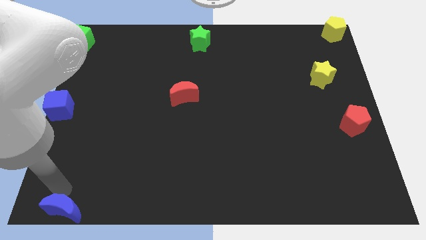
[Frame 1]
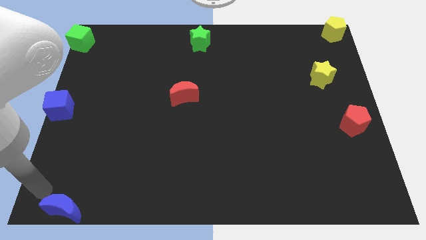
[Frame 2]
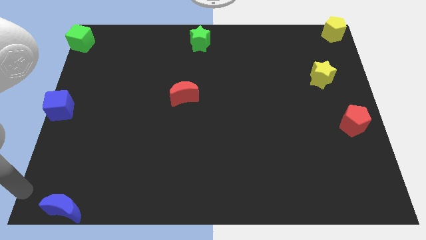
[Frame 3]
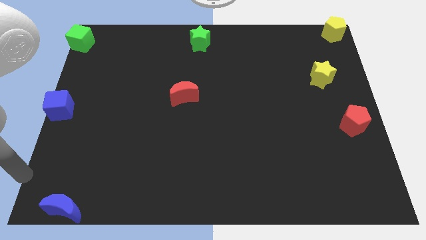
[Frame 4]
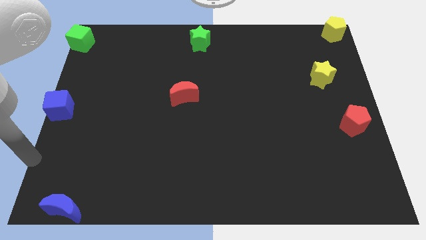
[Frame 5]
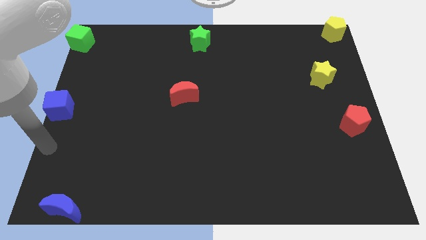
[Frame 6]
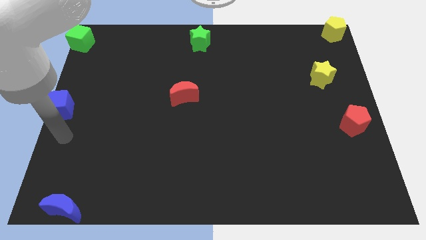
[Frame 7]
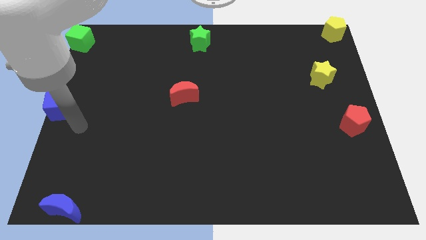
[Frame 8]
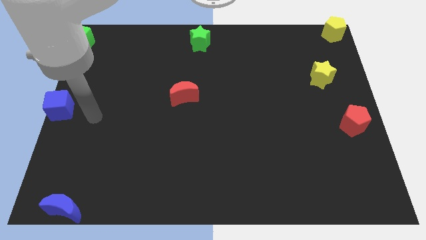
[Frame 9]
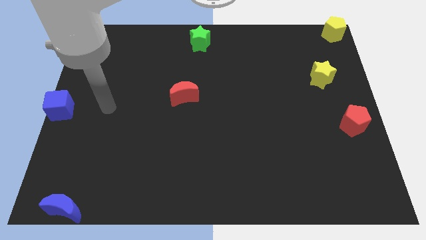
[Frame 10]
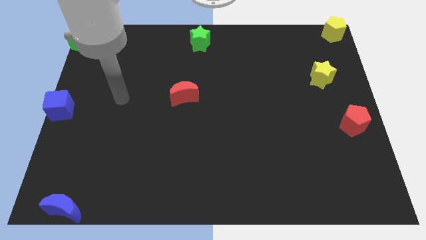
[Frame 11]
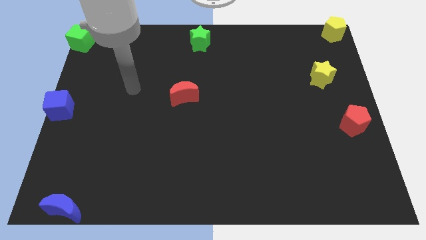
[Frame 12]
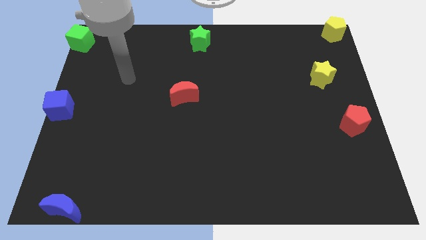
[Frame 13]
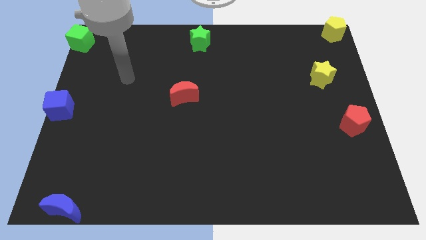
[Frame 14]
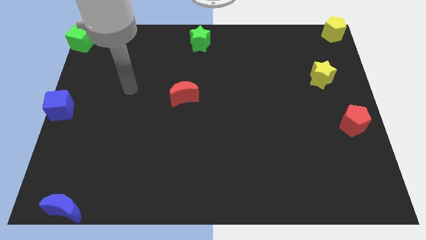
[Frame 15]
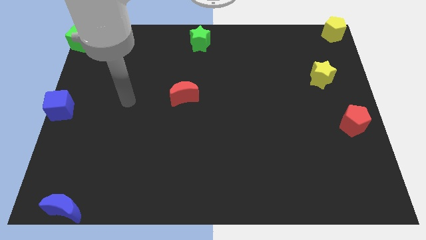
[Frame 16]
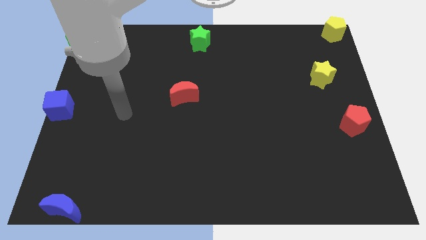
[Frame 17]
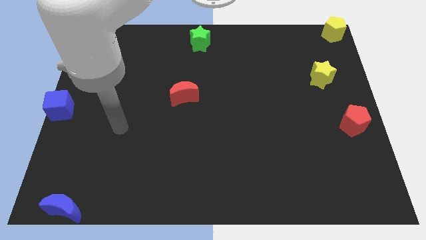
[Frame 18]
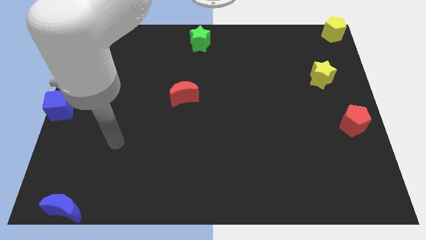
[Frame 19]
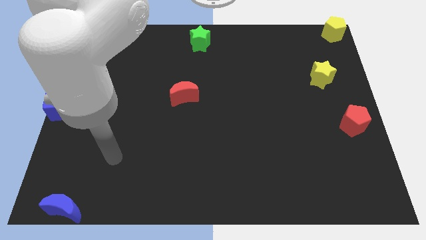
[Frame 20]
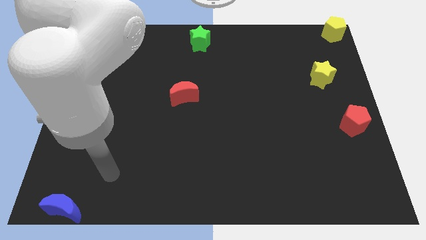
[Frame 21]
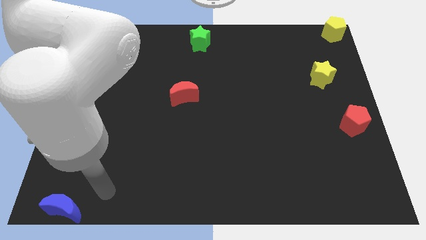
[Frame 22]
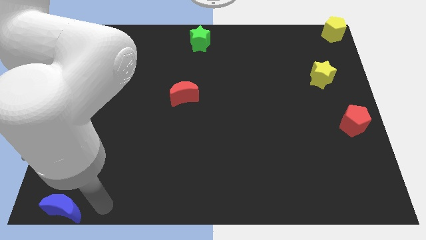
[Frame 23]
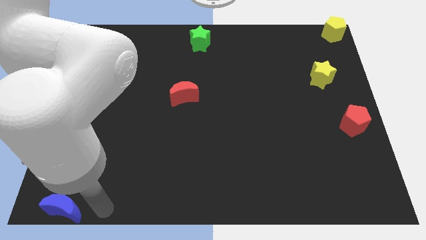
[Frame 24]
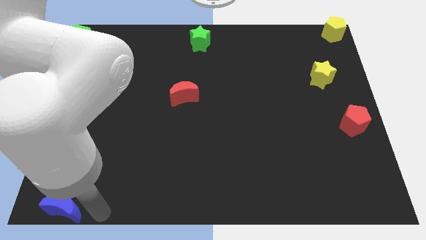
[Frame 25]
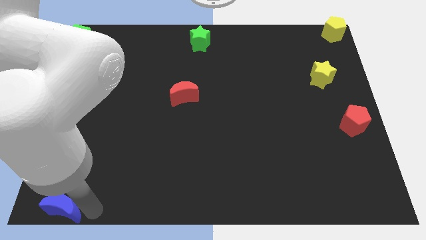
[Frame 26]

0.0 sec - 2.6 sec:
move your arm and point to the right of the blue crescent

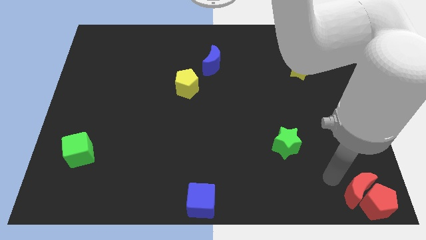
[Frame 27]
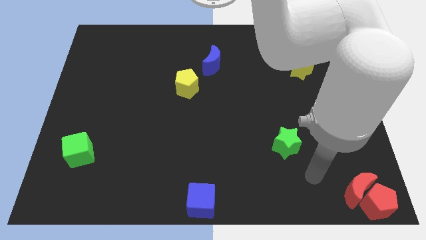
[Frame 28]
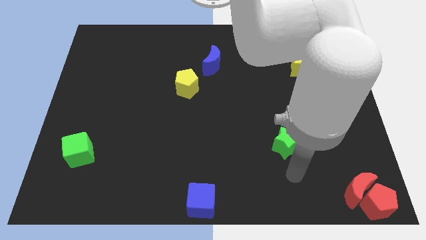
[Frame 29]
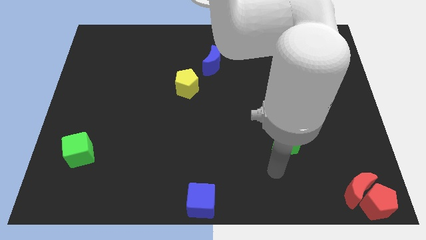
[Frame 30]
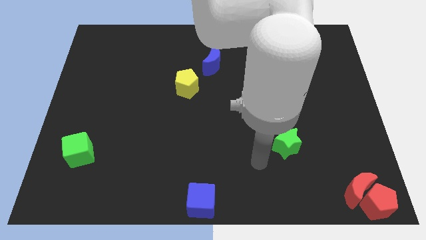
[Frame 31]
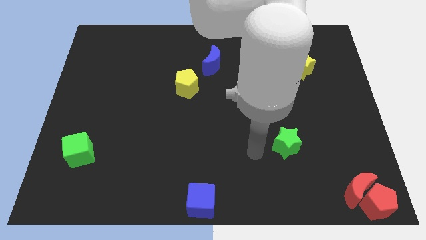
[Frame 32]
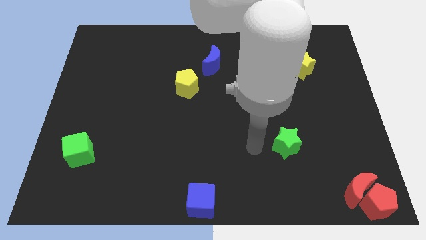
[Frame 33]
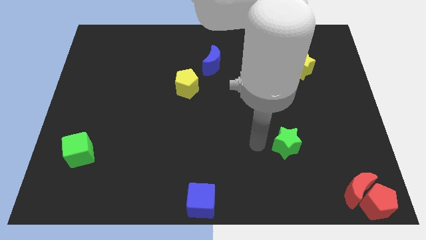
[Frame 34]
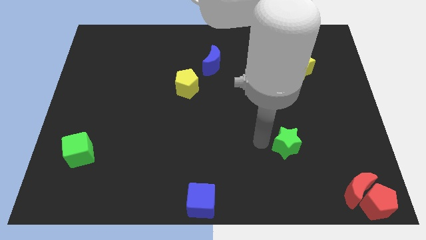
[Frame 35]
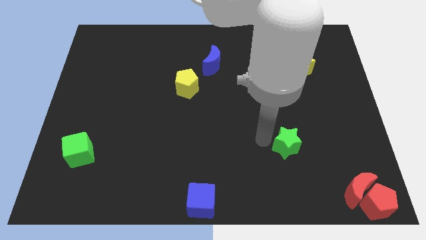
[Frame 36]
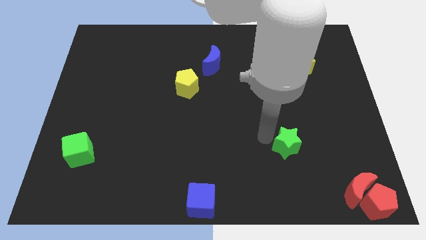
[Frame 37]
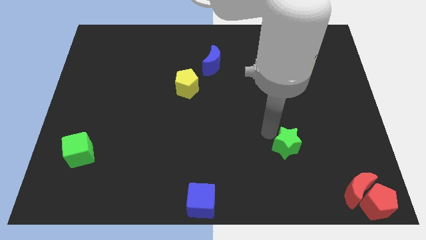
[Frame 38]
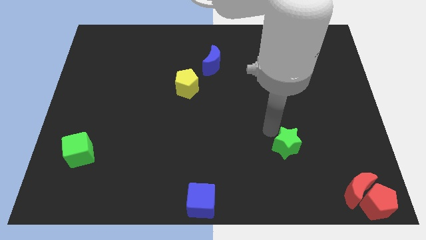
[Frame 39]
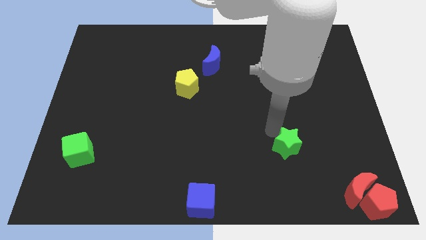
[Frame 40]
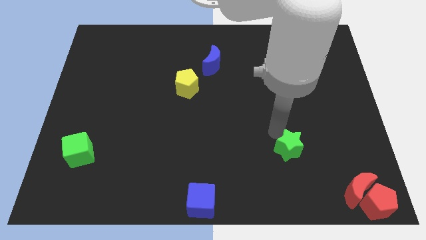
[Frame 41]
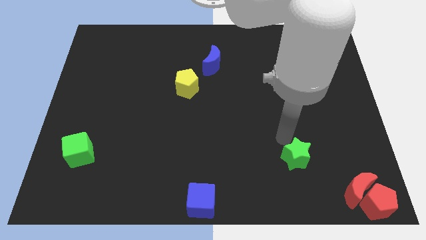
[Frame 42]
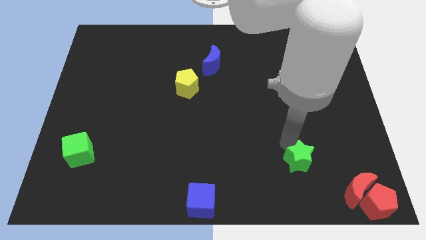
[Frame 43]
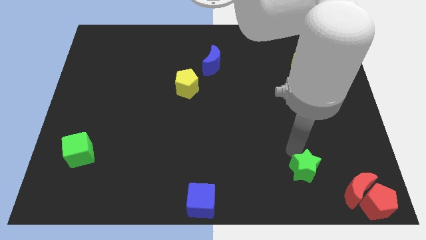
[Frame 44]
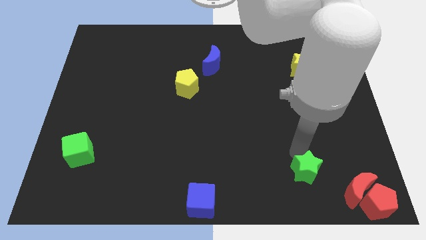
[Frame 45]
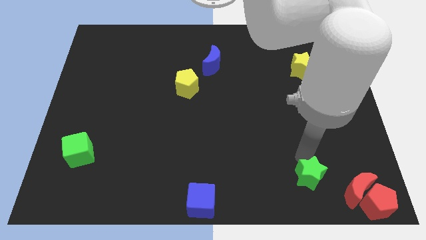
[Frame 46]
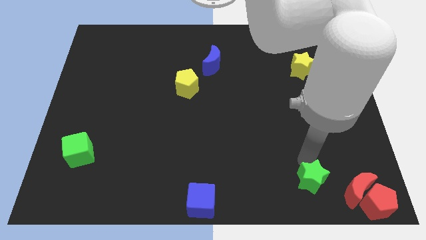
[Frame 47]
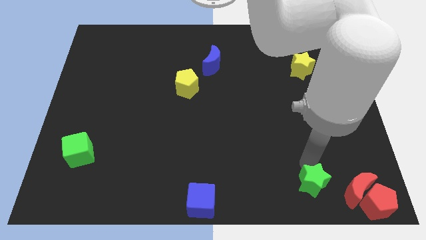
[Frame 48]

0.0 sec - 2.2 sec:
push the green star towards the red crescent

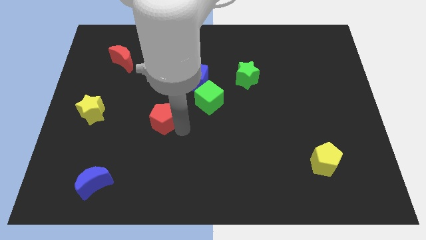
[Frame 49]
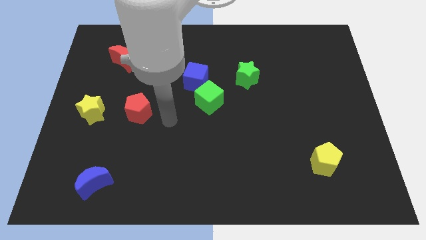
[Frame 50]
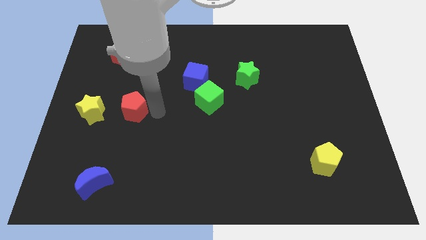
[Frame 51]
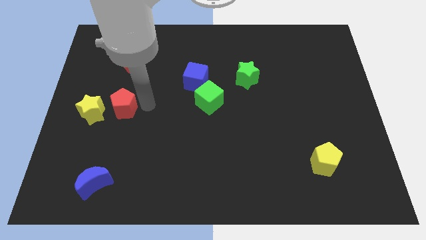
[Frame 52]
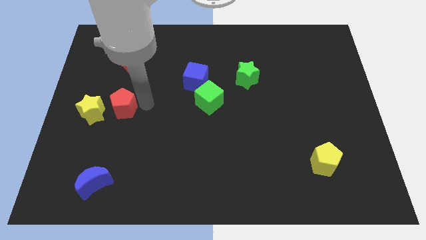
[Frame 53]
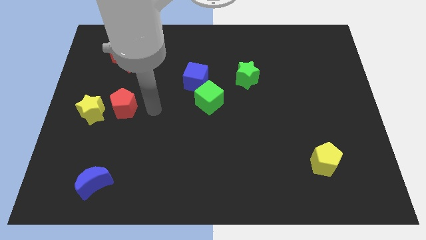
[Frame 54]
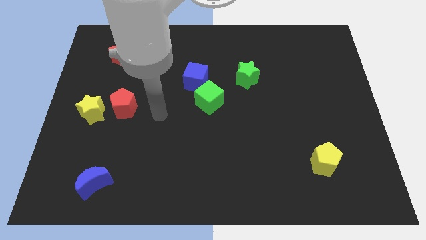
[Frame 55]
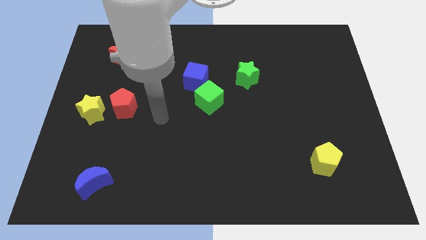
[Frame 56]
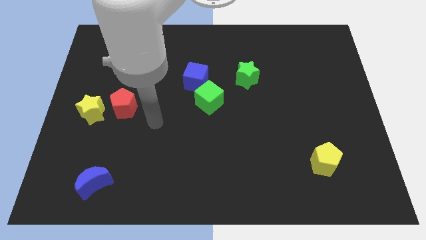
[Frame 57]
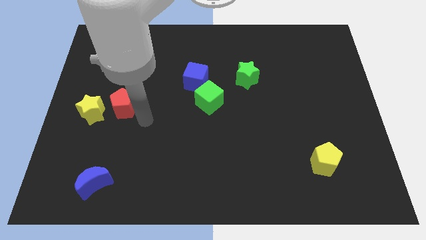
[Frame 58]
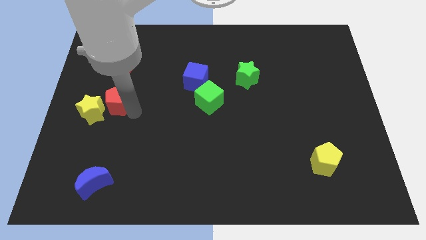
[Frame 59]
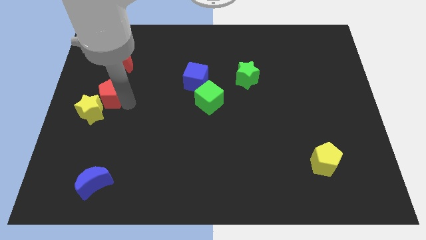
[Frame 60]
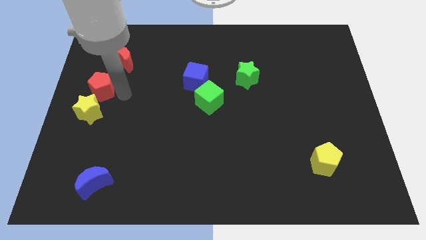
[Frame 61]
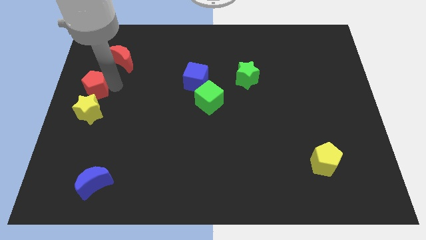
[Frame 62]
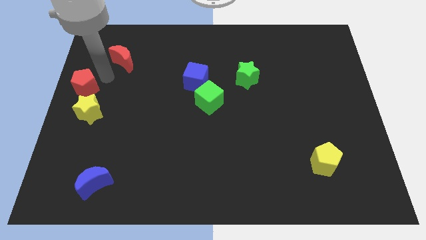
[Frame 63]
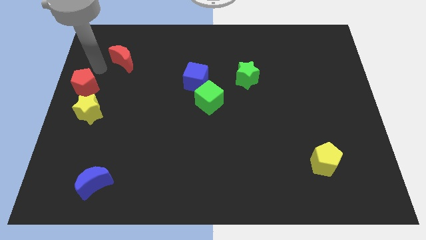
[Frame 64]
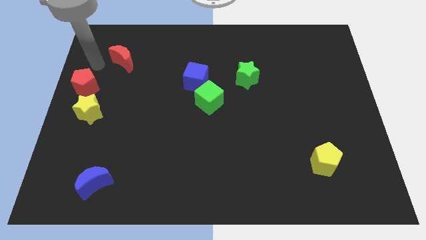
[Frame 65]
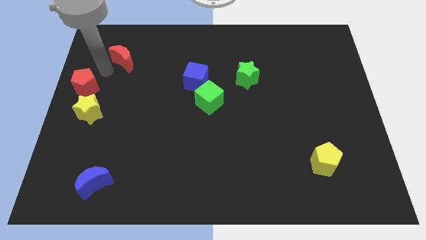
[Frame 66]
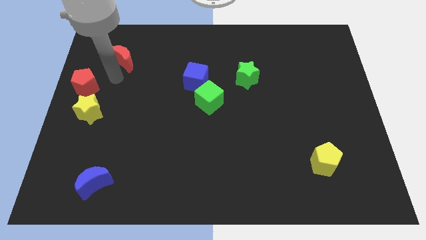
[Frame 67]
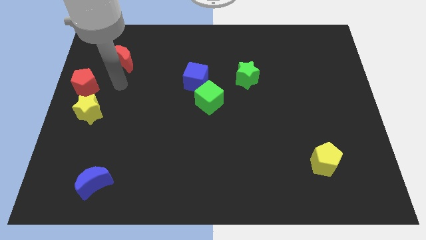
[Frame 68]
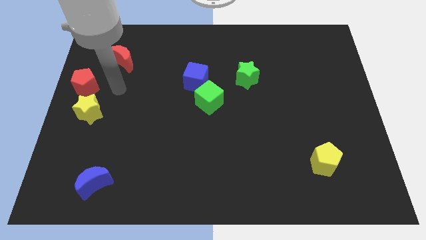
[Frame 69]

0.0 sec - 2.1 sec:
push the red pentagon at the top side of the yellow star

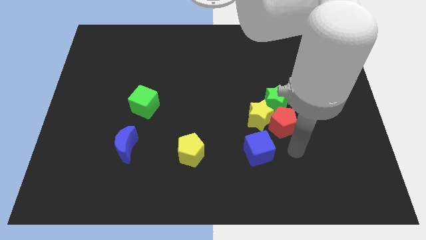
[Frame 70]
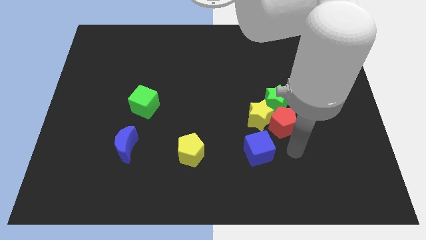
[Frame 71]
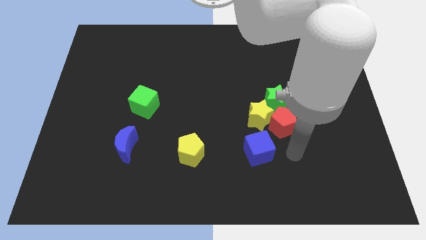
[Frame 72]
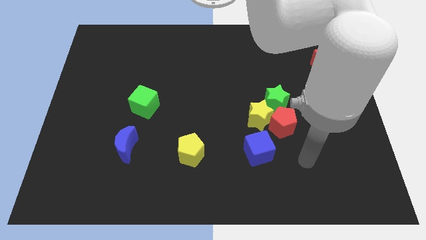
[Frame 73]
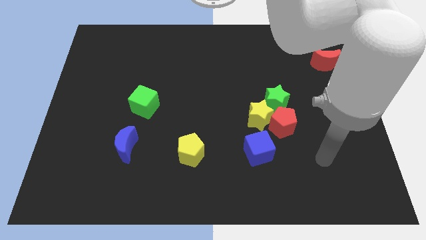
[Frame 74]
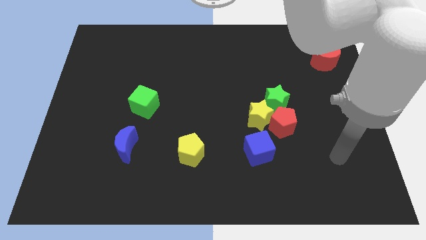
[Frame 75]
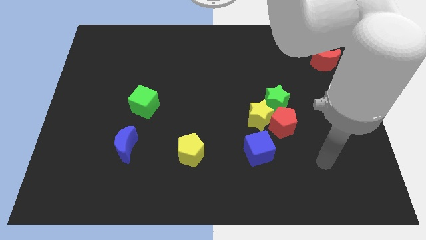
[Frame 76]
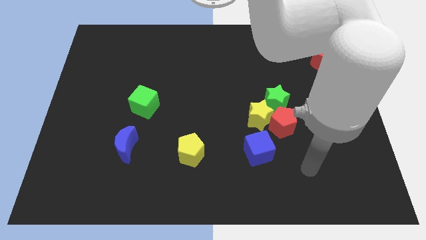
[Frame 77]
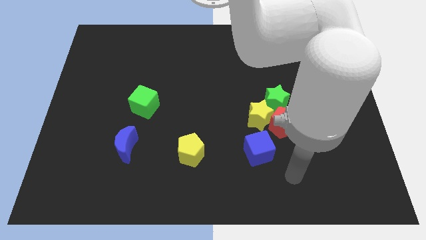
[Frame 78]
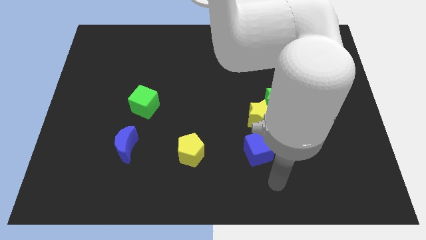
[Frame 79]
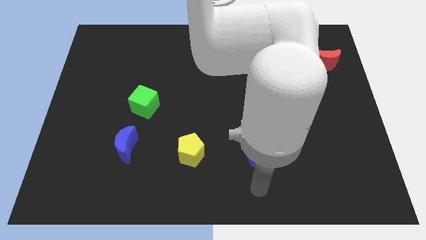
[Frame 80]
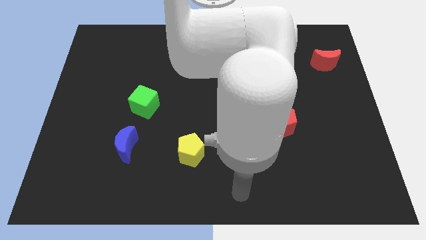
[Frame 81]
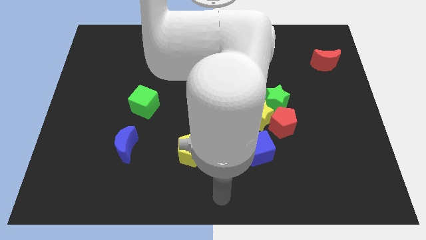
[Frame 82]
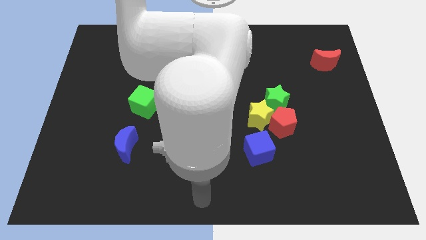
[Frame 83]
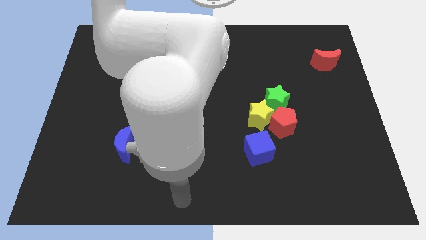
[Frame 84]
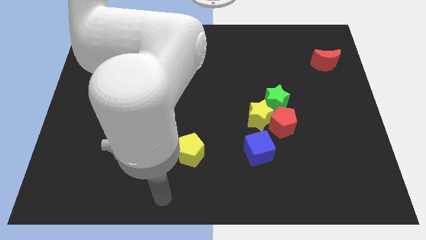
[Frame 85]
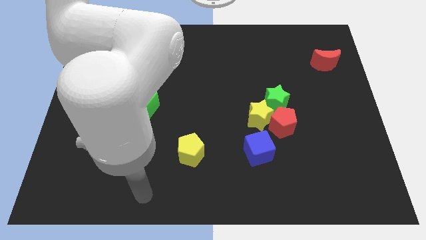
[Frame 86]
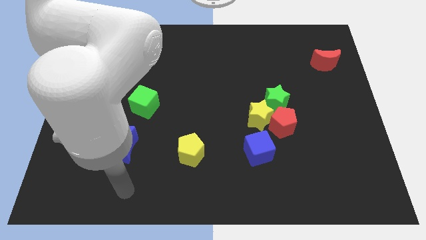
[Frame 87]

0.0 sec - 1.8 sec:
move the arm away from the blue cube

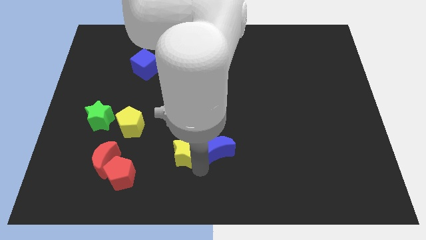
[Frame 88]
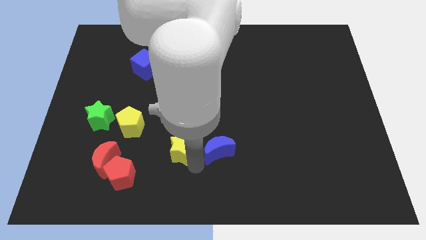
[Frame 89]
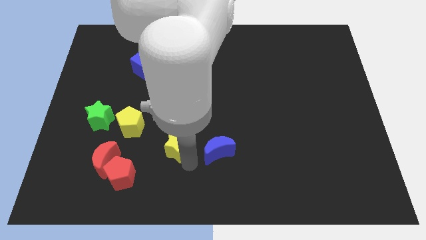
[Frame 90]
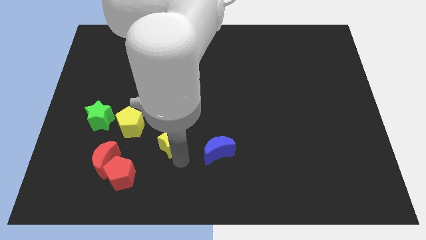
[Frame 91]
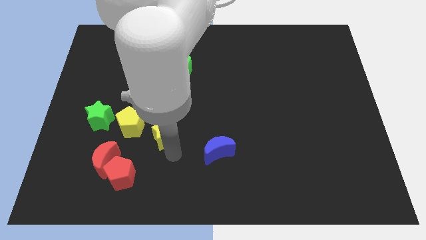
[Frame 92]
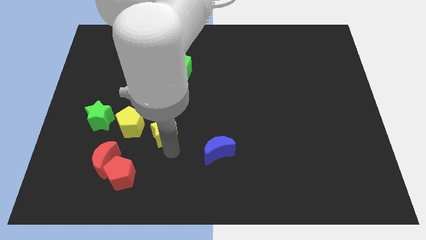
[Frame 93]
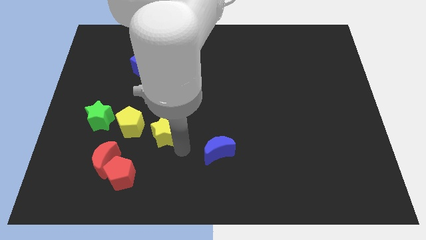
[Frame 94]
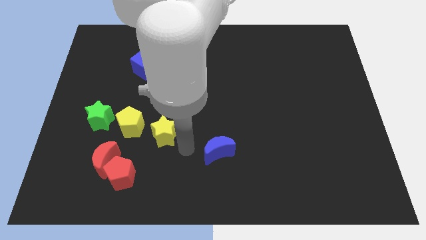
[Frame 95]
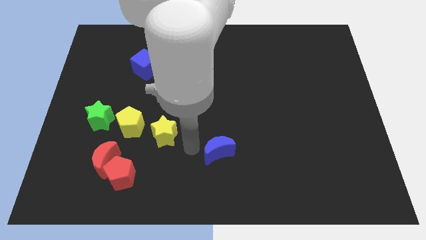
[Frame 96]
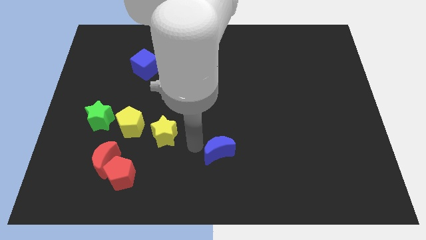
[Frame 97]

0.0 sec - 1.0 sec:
push the yellow star right to the yellow pentagon
